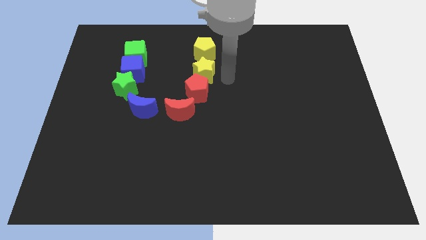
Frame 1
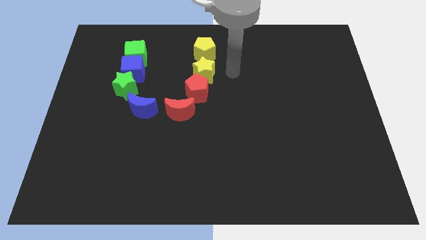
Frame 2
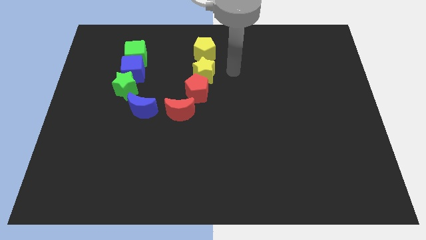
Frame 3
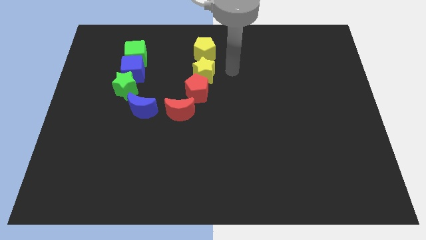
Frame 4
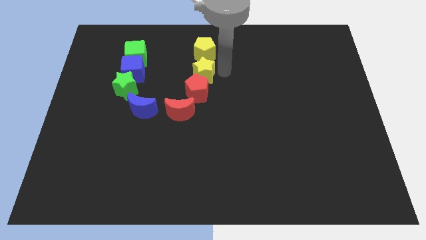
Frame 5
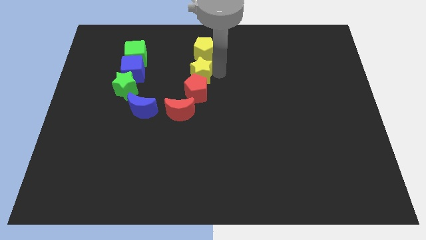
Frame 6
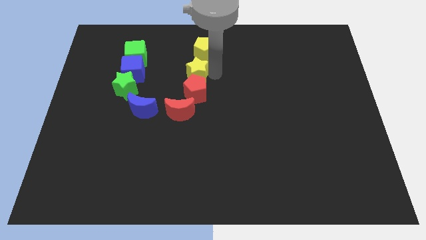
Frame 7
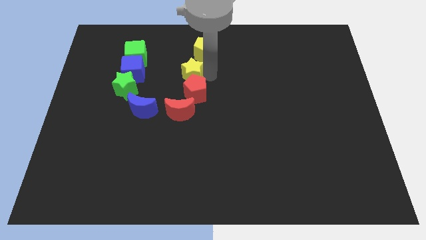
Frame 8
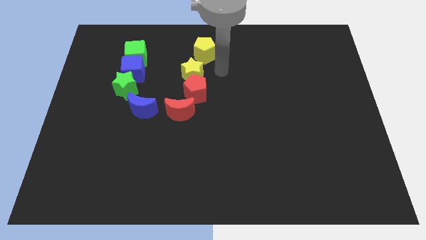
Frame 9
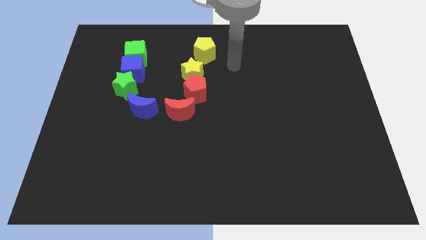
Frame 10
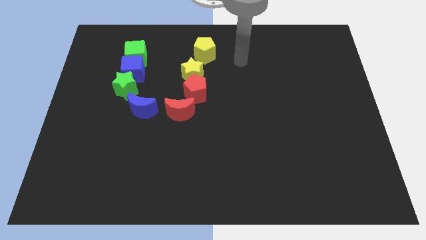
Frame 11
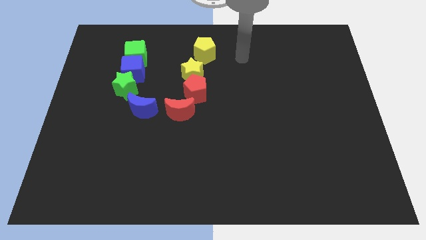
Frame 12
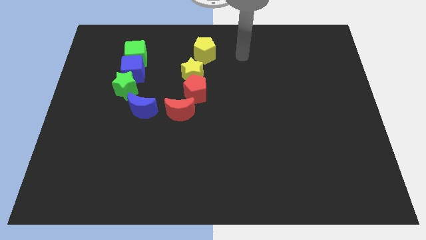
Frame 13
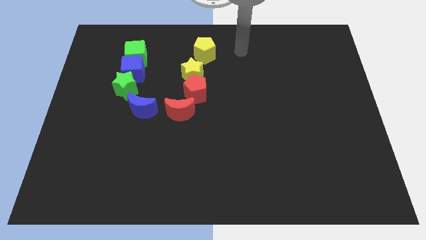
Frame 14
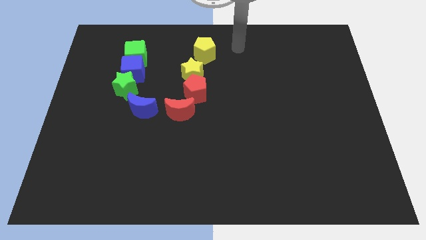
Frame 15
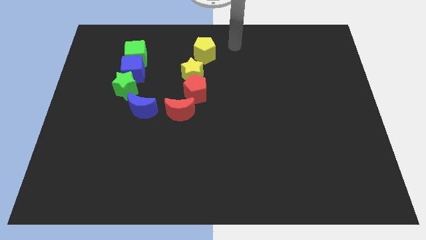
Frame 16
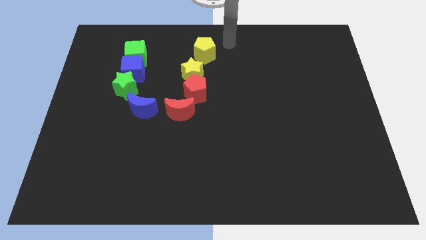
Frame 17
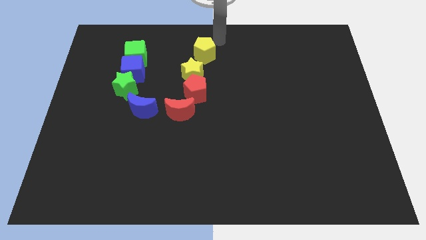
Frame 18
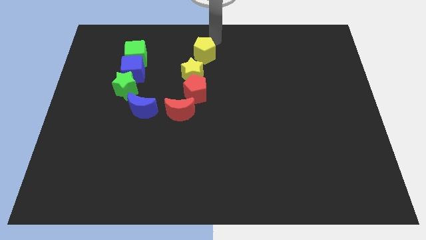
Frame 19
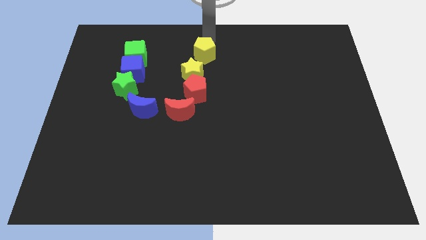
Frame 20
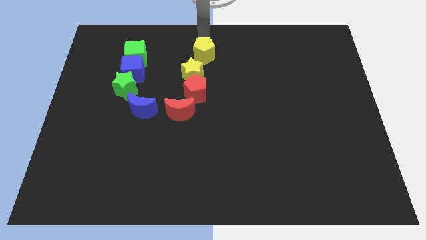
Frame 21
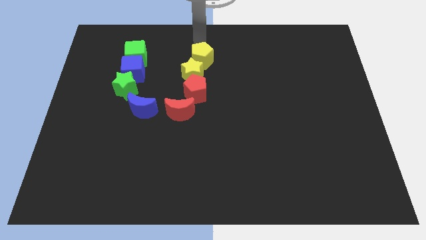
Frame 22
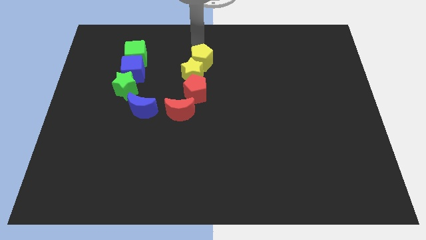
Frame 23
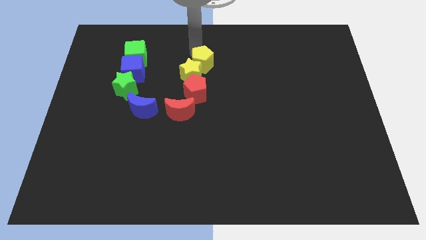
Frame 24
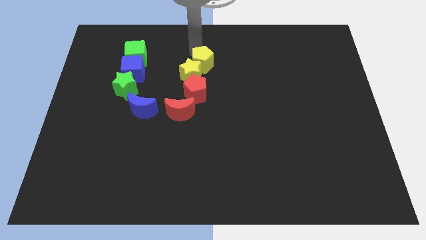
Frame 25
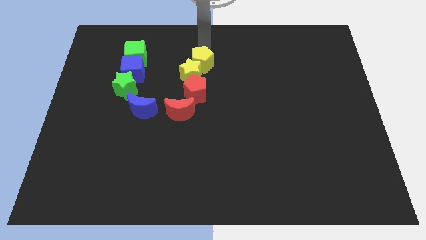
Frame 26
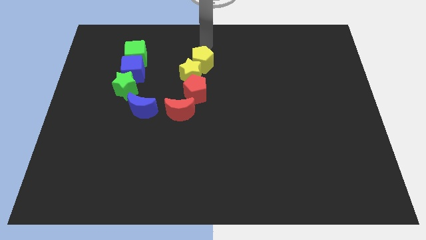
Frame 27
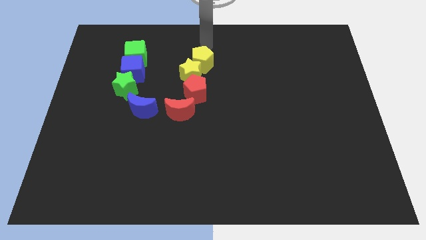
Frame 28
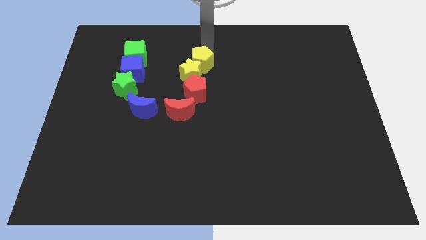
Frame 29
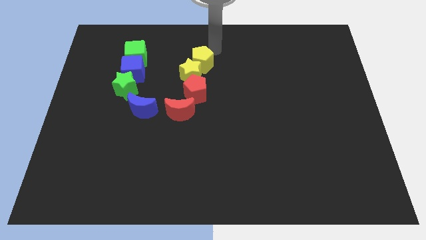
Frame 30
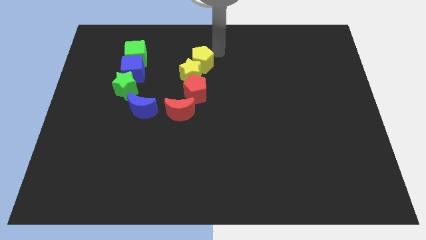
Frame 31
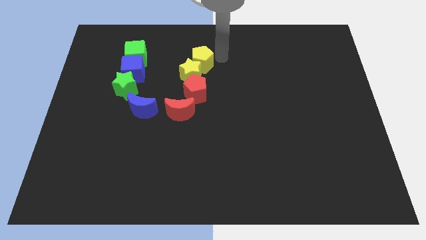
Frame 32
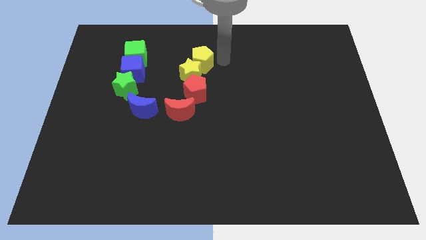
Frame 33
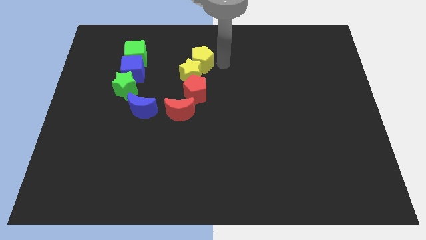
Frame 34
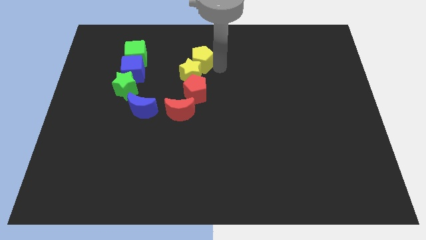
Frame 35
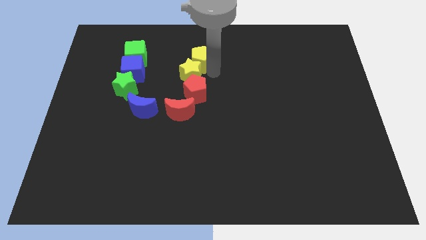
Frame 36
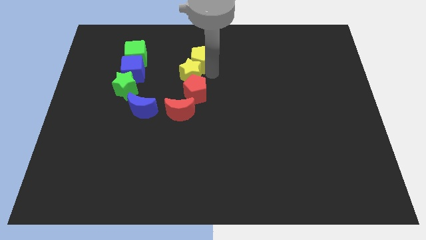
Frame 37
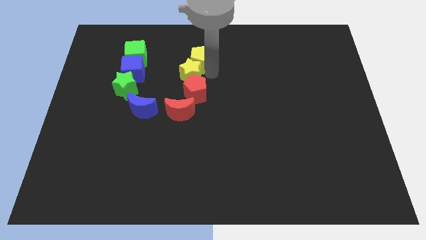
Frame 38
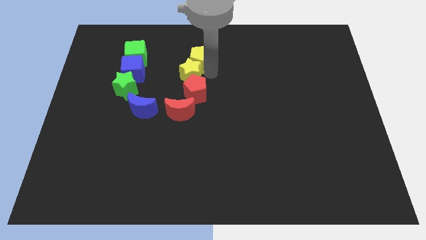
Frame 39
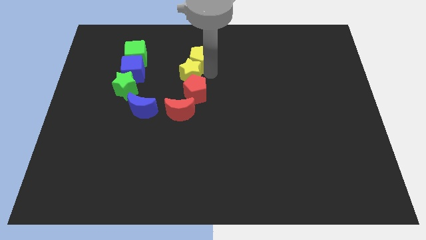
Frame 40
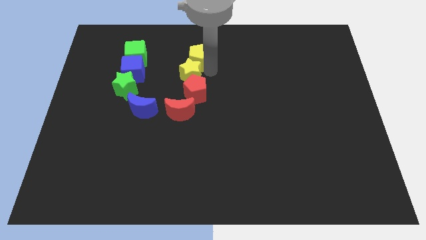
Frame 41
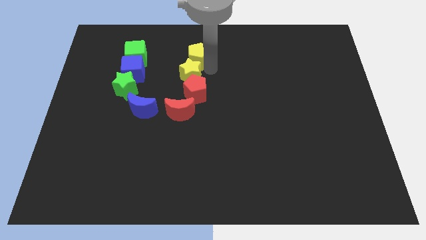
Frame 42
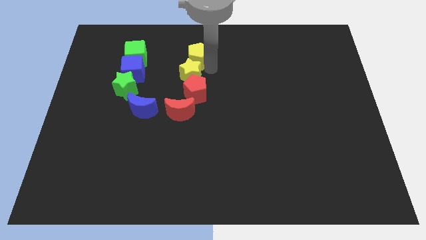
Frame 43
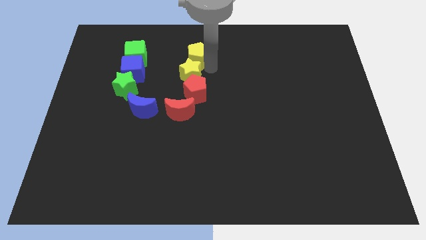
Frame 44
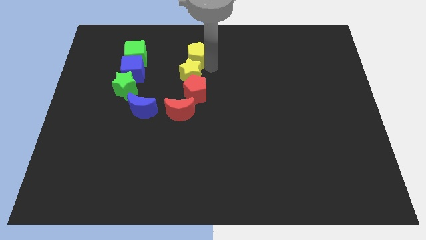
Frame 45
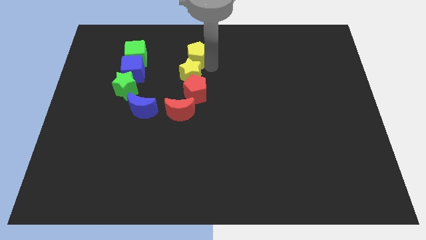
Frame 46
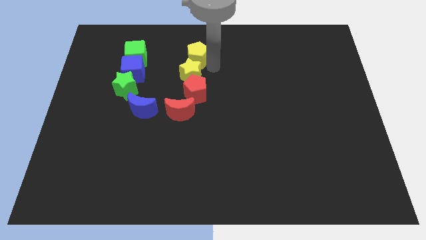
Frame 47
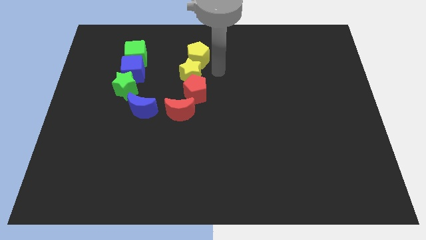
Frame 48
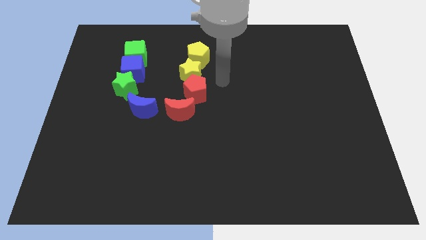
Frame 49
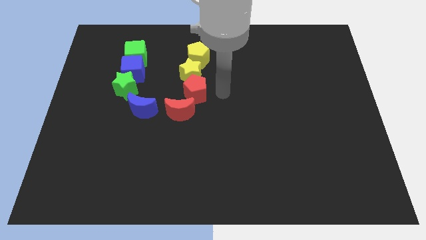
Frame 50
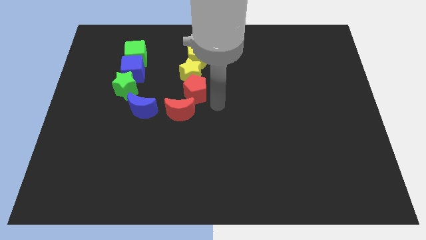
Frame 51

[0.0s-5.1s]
push the yellow blocks to the left of the board

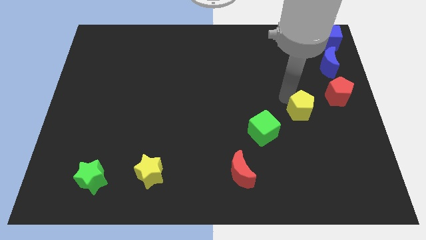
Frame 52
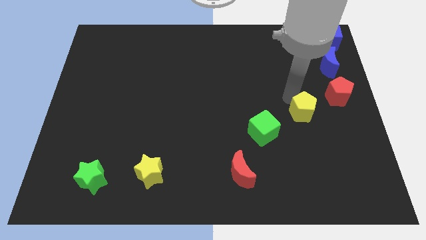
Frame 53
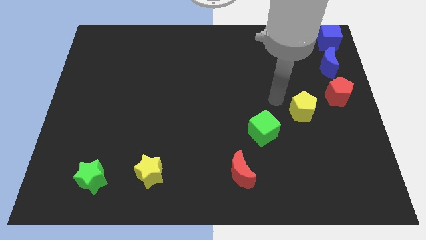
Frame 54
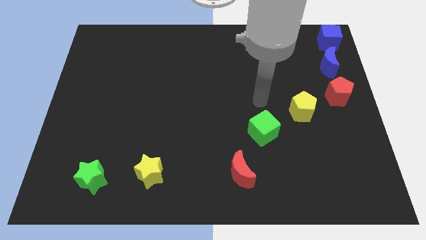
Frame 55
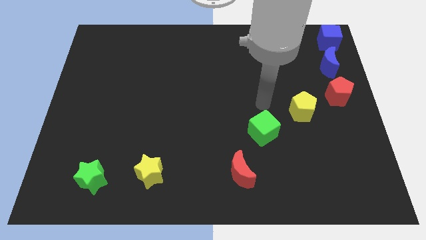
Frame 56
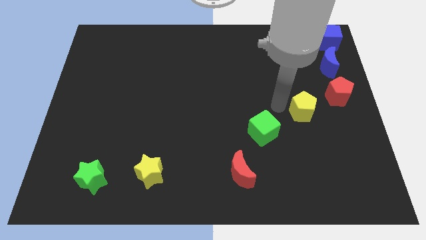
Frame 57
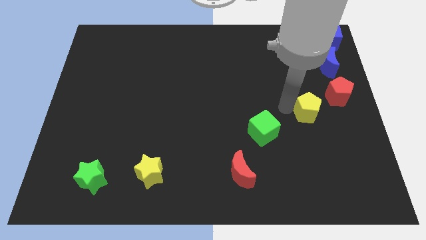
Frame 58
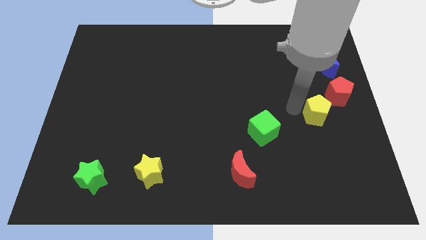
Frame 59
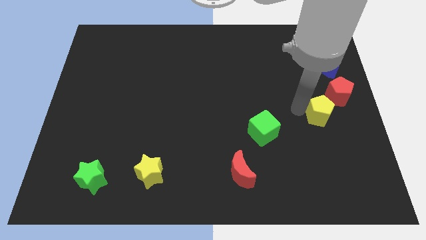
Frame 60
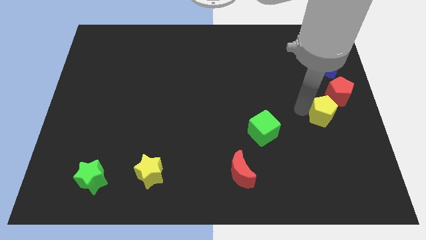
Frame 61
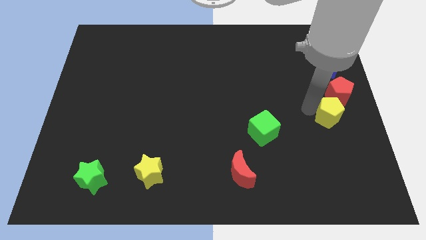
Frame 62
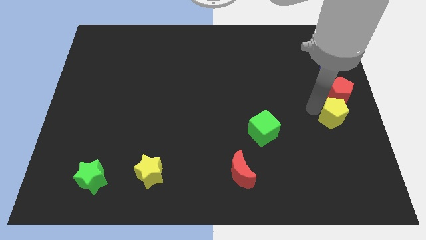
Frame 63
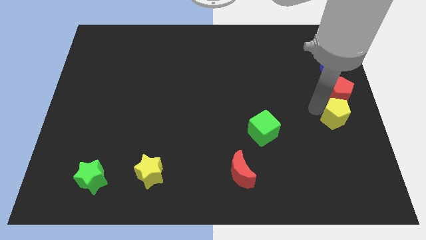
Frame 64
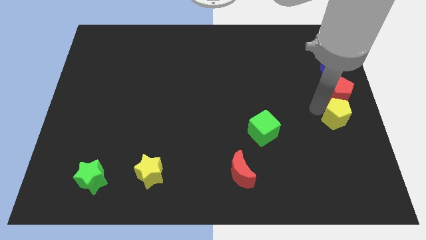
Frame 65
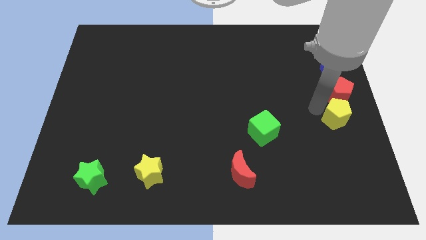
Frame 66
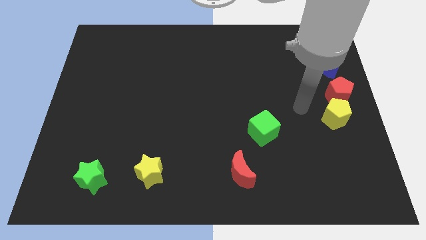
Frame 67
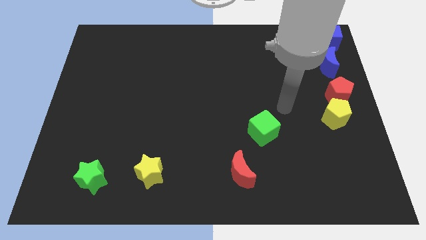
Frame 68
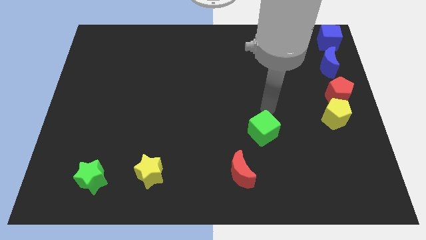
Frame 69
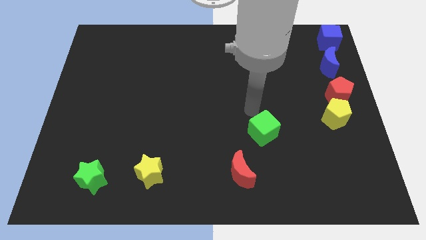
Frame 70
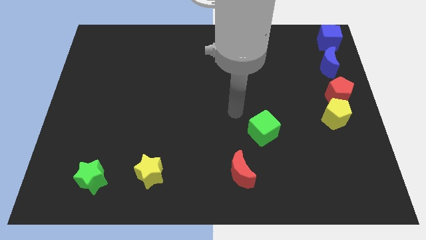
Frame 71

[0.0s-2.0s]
move the yellow pentagon underneath the red pentagon

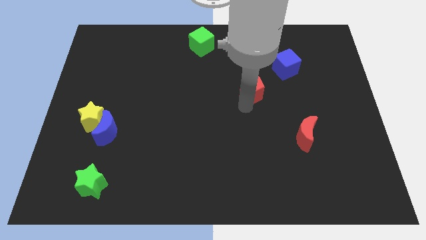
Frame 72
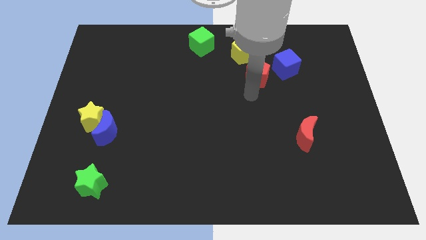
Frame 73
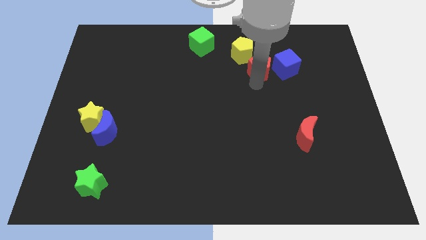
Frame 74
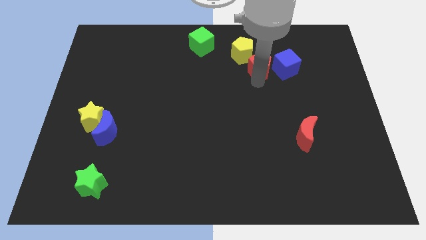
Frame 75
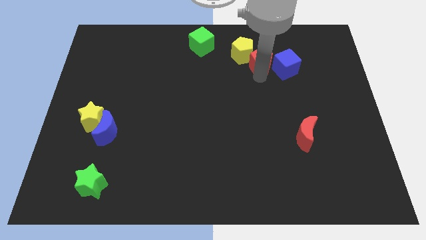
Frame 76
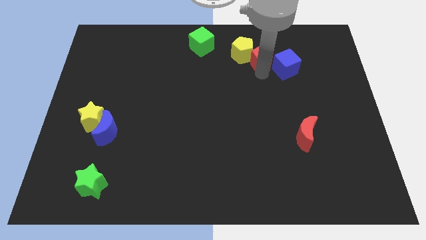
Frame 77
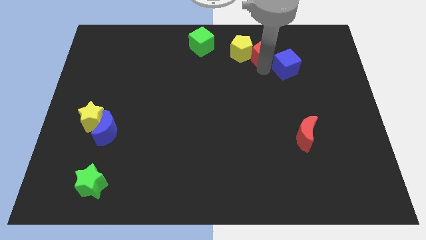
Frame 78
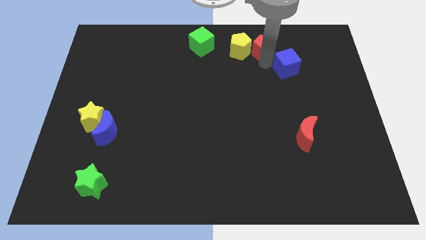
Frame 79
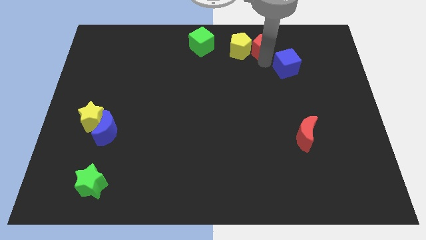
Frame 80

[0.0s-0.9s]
place the red pentagon to the right of the yellow pentagon

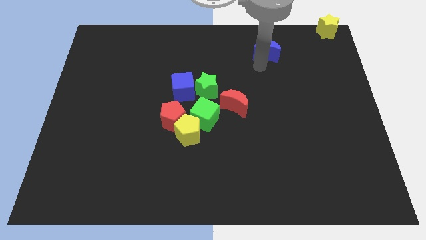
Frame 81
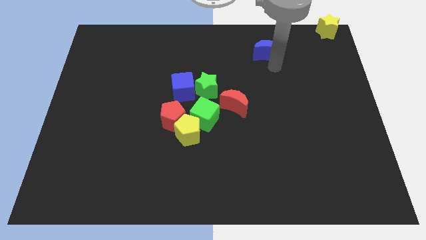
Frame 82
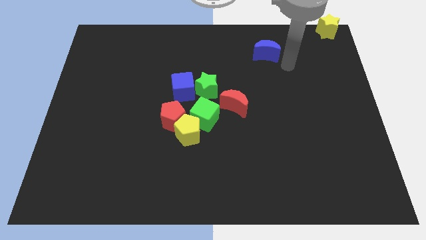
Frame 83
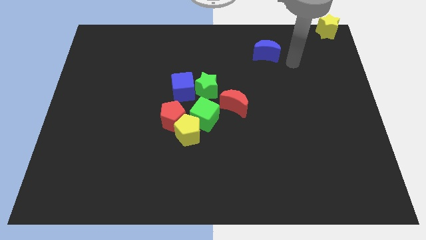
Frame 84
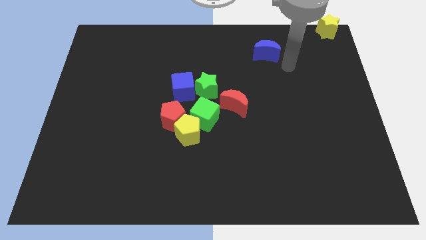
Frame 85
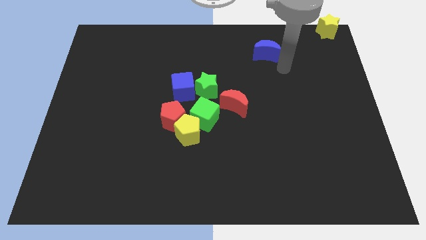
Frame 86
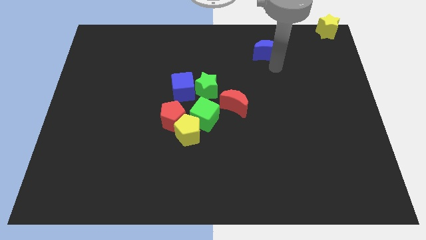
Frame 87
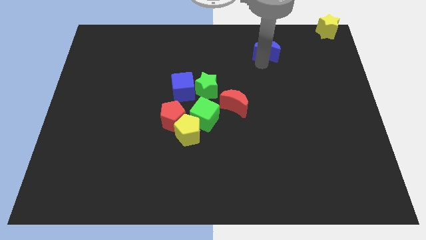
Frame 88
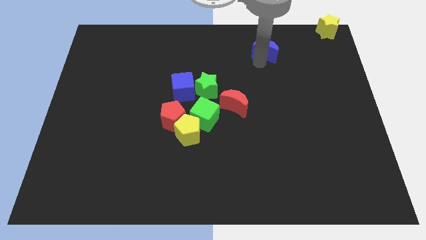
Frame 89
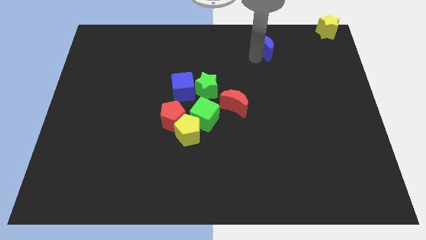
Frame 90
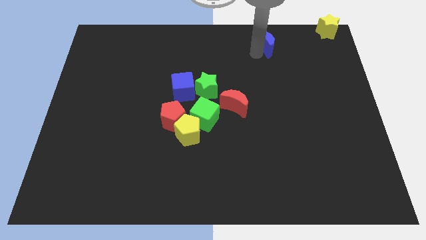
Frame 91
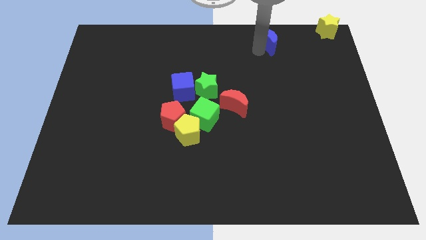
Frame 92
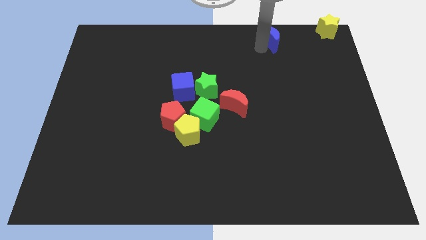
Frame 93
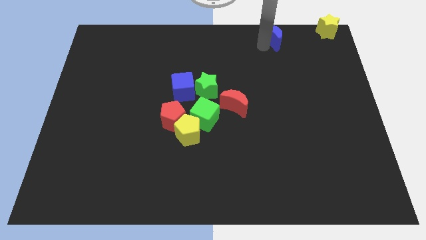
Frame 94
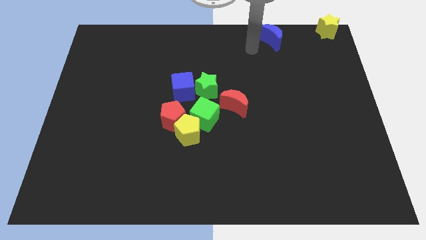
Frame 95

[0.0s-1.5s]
slide the blue semicircle to the top side
